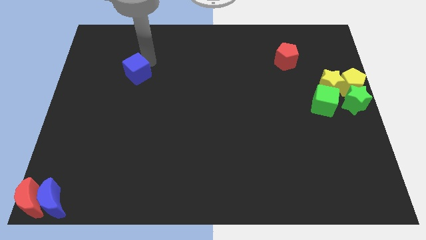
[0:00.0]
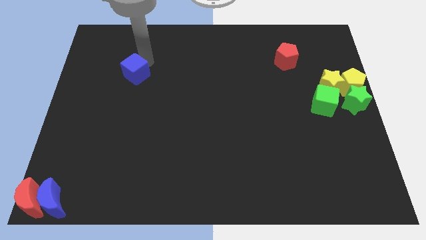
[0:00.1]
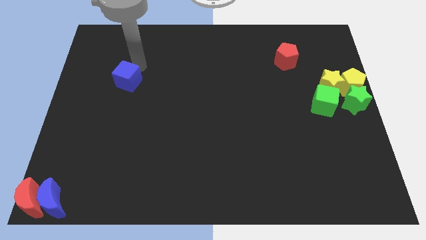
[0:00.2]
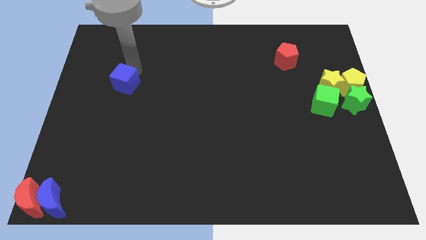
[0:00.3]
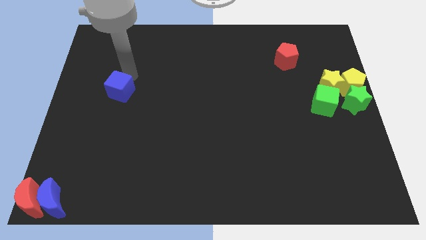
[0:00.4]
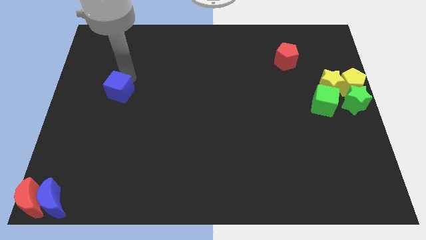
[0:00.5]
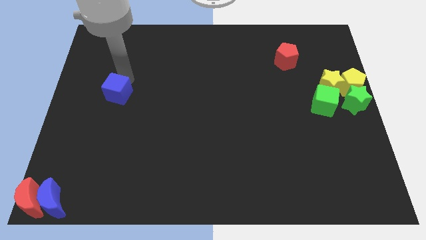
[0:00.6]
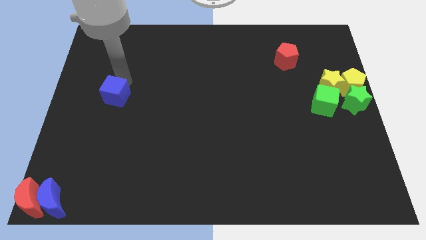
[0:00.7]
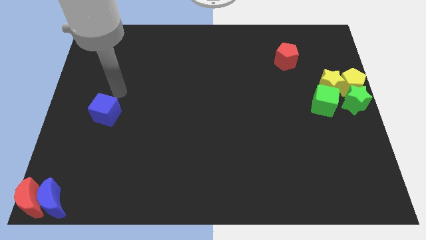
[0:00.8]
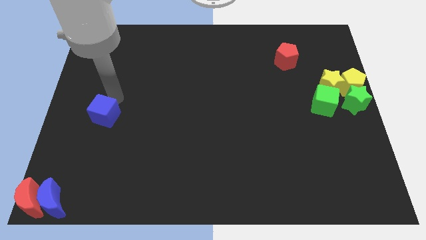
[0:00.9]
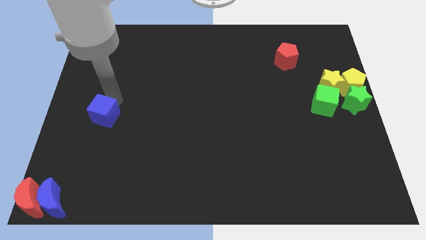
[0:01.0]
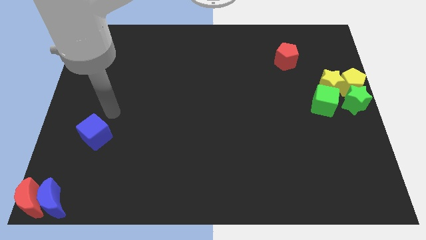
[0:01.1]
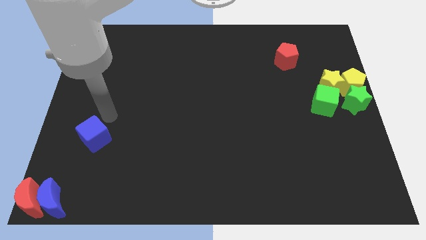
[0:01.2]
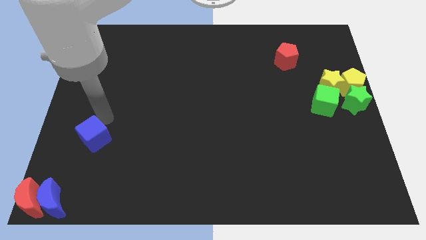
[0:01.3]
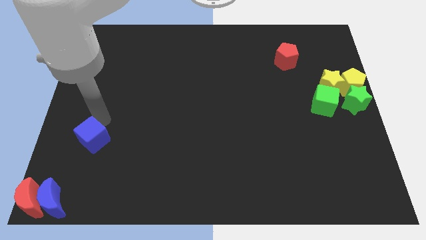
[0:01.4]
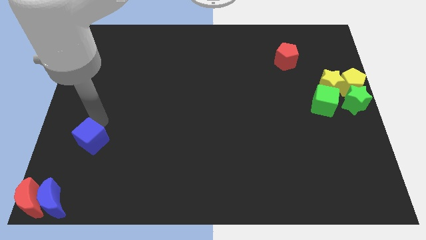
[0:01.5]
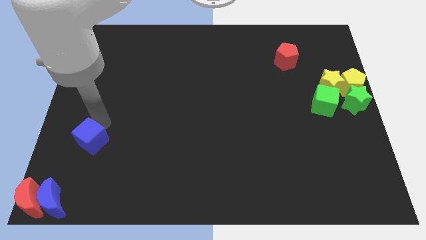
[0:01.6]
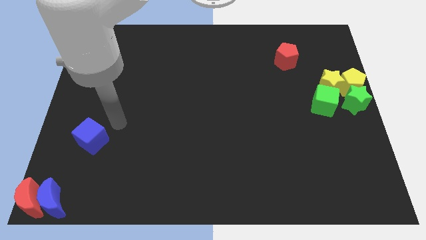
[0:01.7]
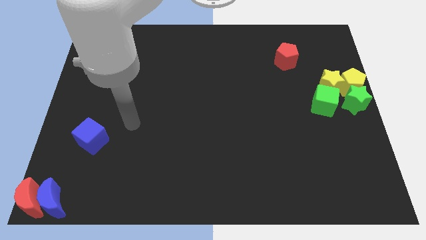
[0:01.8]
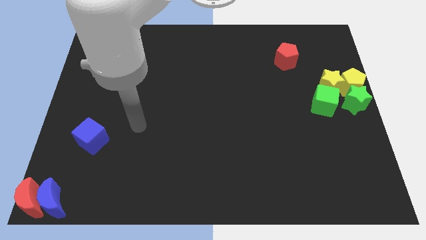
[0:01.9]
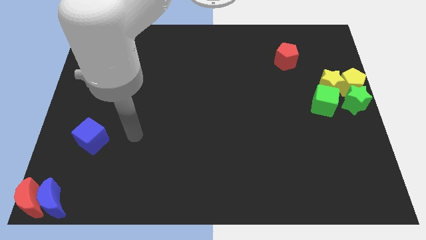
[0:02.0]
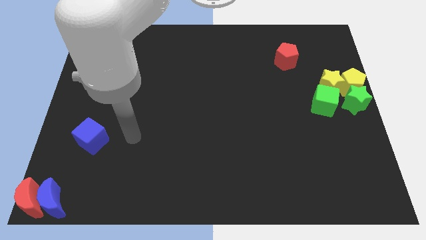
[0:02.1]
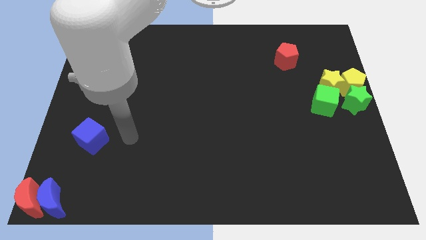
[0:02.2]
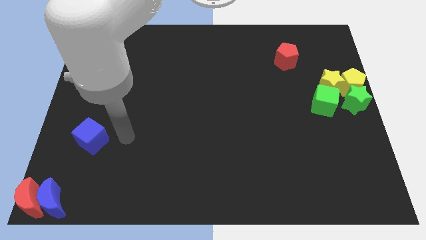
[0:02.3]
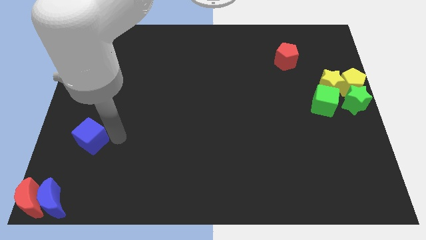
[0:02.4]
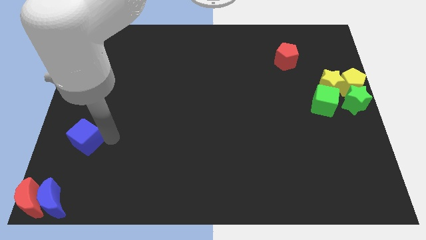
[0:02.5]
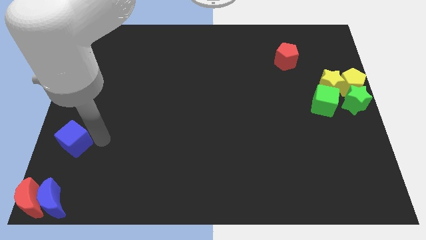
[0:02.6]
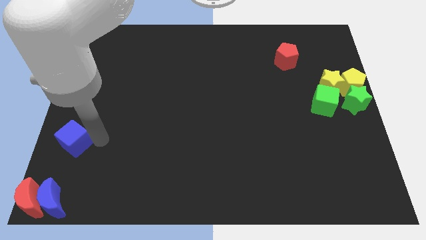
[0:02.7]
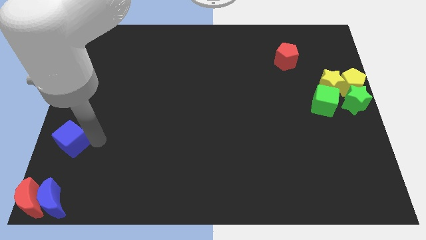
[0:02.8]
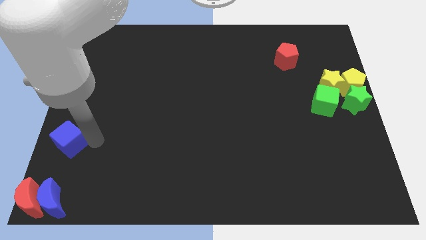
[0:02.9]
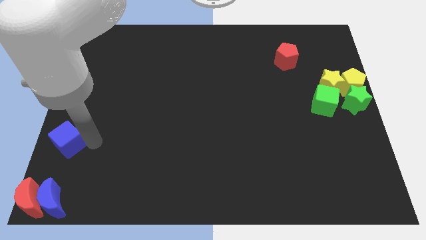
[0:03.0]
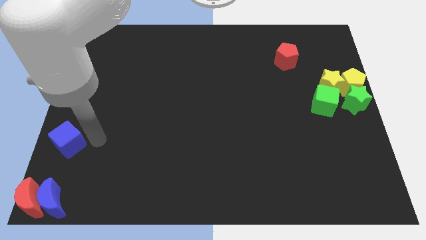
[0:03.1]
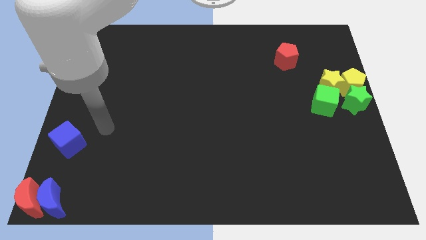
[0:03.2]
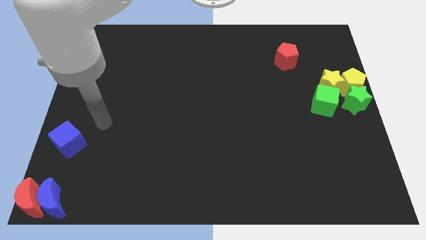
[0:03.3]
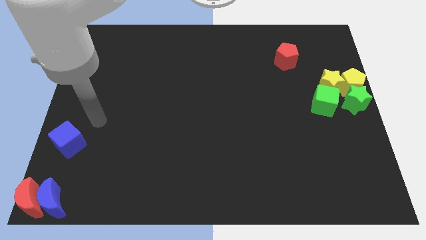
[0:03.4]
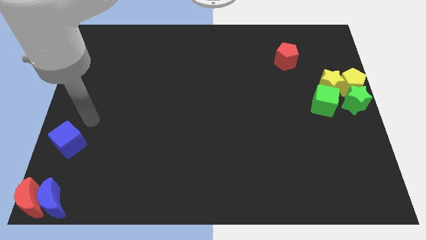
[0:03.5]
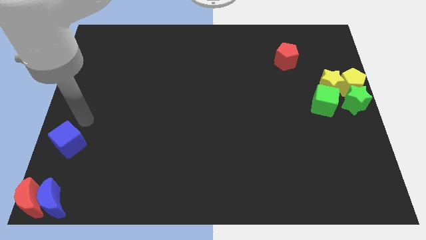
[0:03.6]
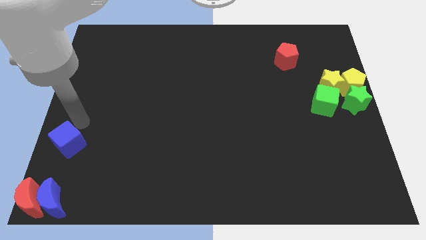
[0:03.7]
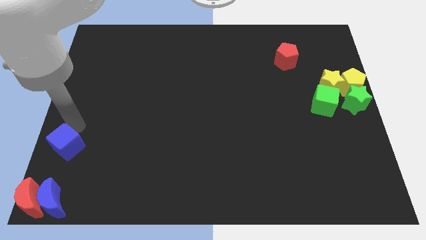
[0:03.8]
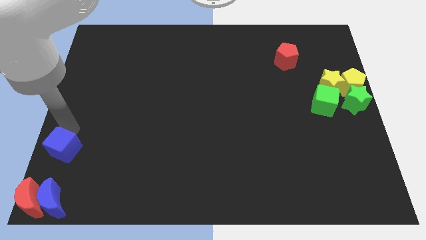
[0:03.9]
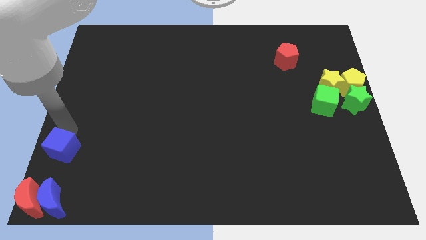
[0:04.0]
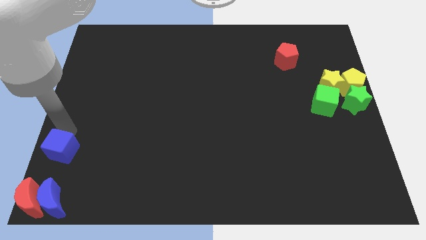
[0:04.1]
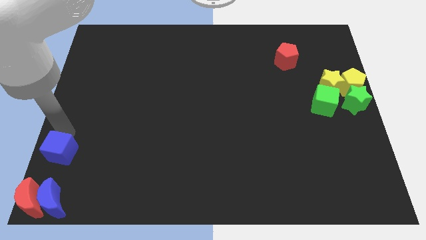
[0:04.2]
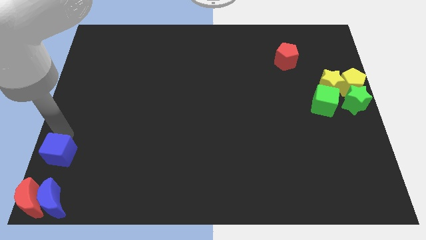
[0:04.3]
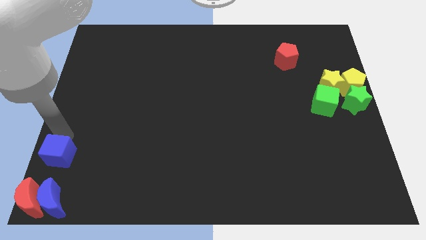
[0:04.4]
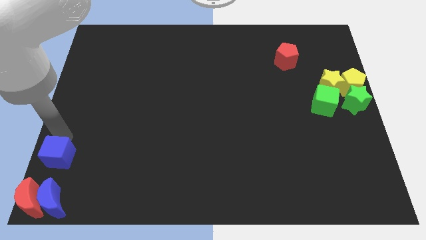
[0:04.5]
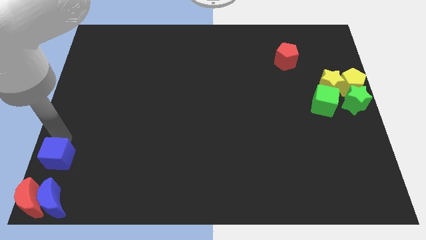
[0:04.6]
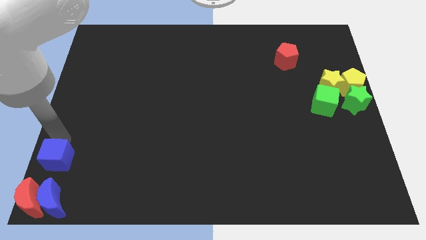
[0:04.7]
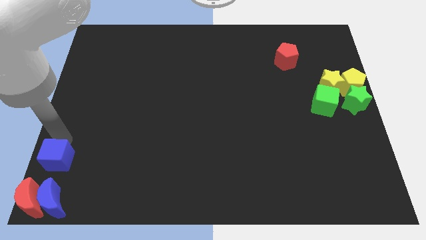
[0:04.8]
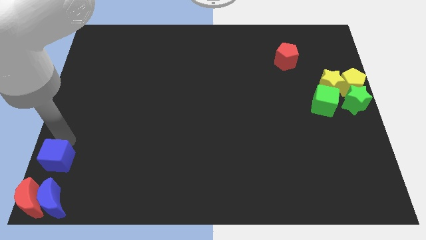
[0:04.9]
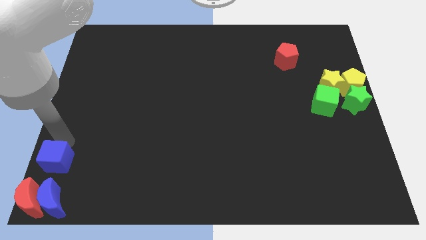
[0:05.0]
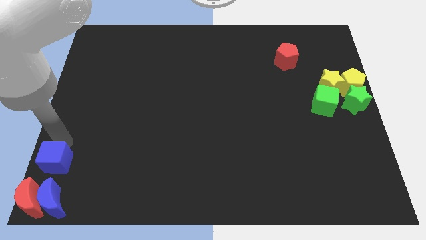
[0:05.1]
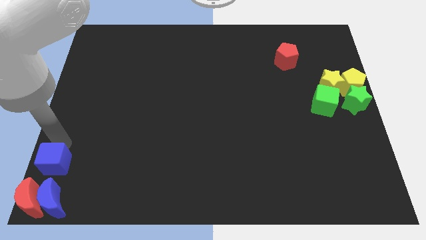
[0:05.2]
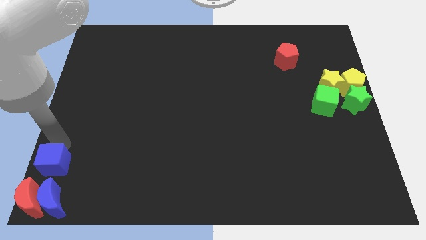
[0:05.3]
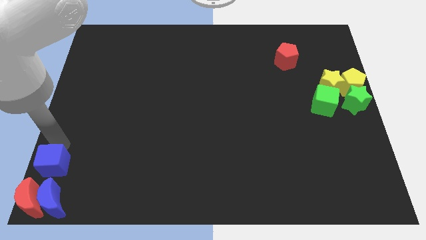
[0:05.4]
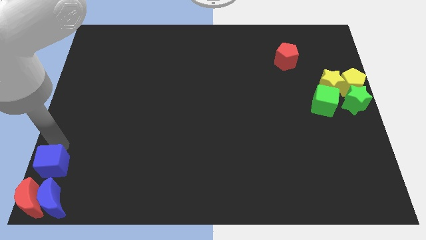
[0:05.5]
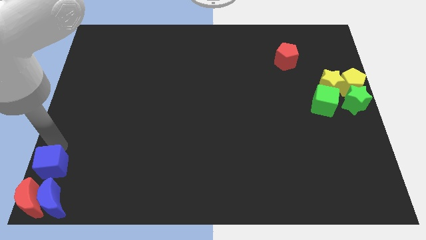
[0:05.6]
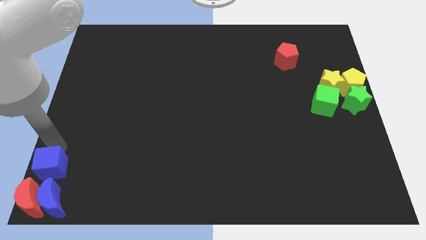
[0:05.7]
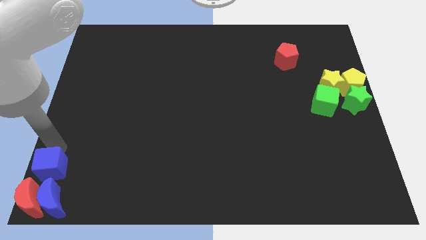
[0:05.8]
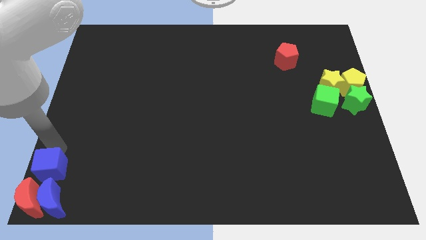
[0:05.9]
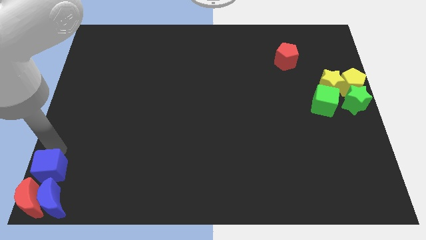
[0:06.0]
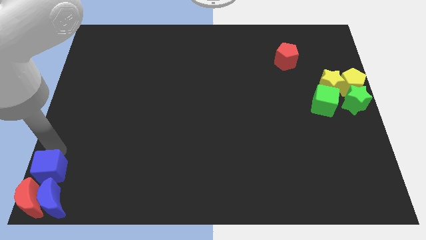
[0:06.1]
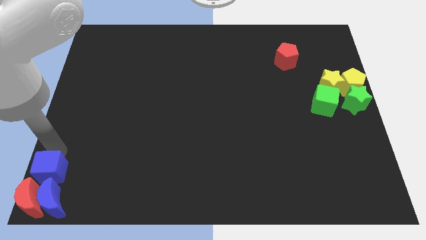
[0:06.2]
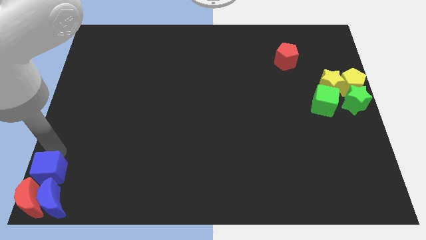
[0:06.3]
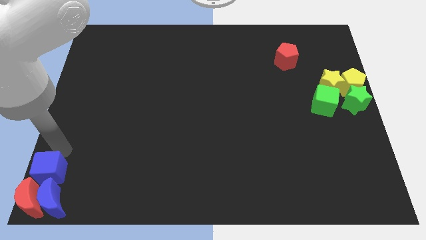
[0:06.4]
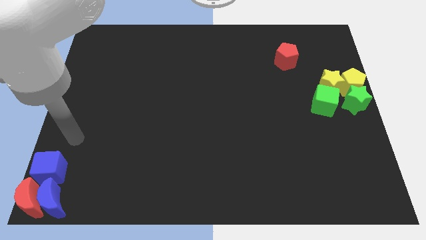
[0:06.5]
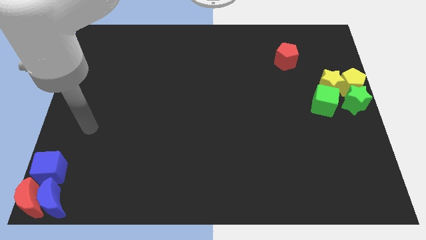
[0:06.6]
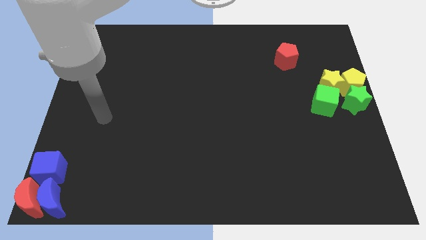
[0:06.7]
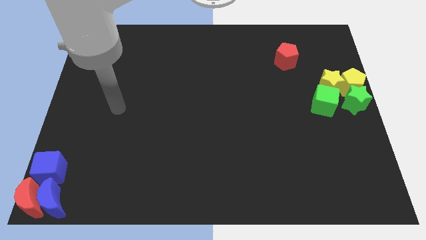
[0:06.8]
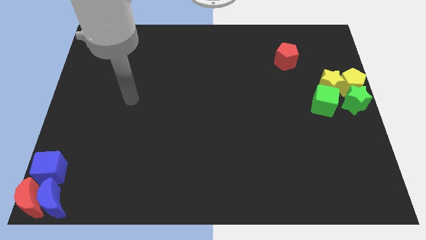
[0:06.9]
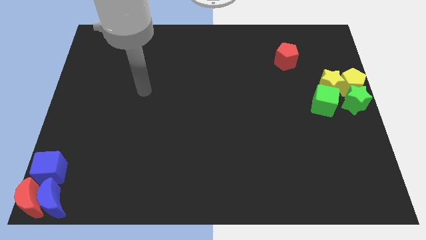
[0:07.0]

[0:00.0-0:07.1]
place the blue cube above the red and blue crescents

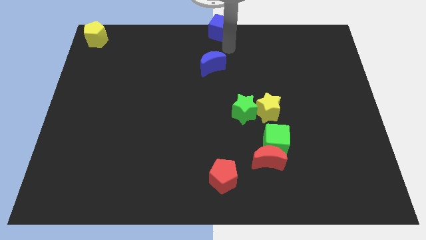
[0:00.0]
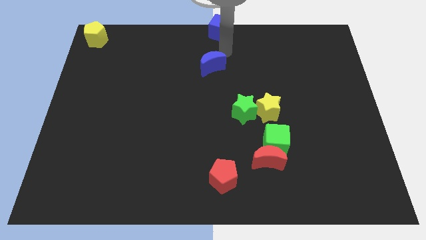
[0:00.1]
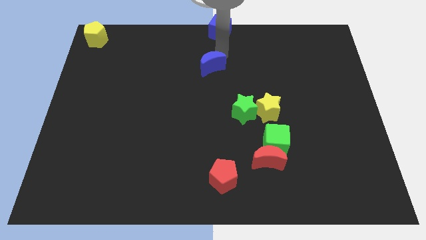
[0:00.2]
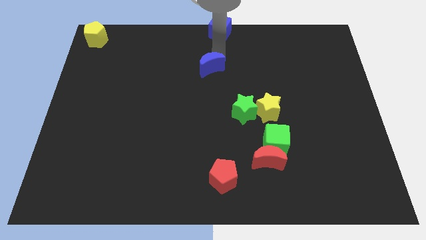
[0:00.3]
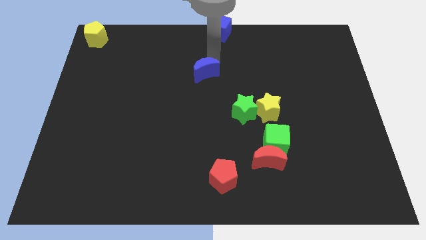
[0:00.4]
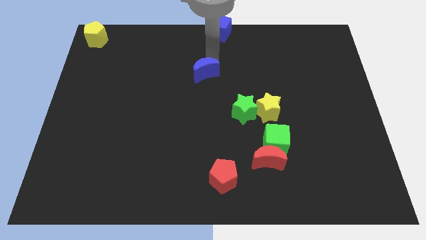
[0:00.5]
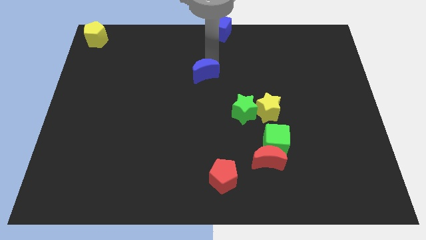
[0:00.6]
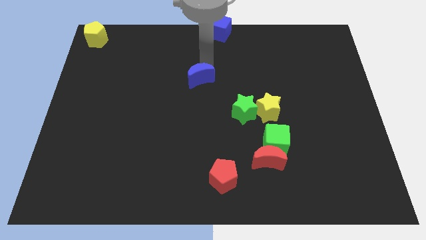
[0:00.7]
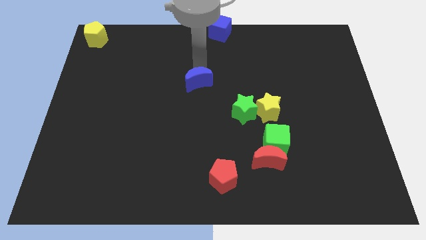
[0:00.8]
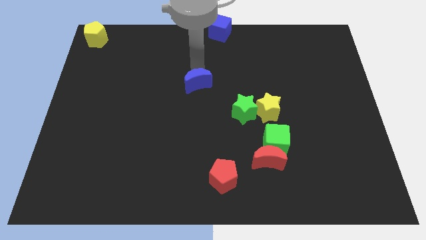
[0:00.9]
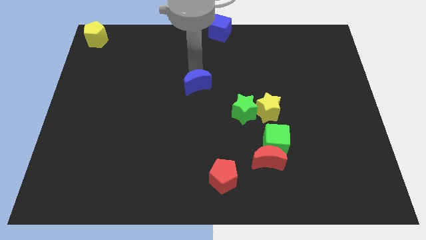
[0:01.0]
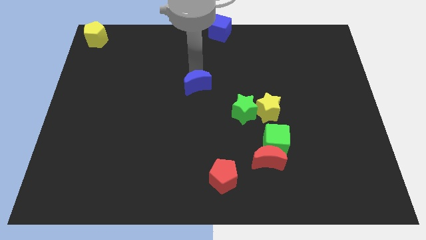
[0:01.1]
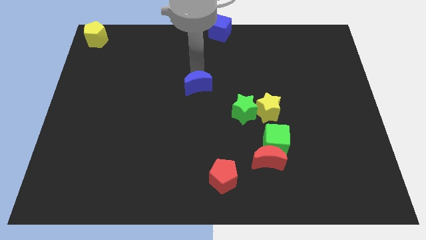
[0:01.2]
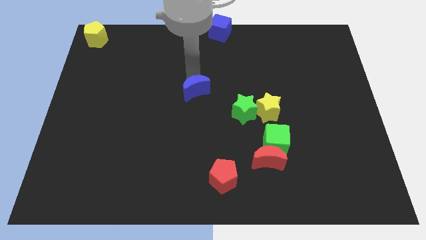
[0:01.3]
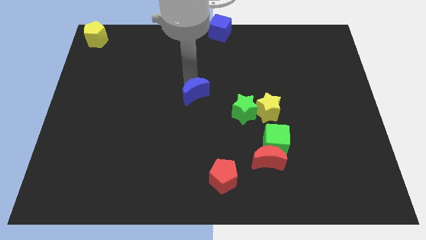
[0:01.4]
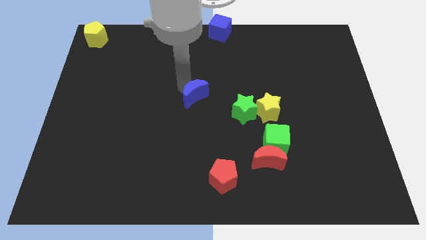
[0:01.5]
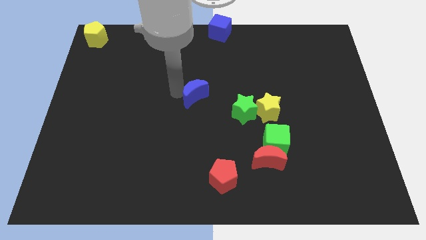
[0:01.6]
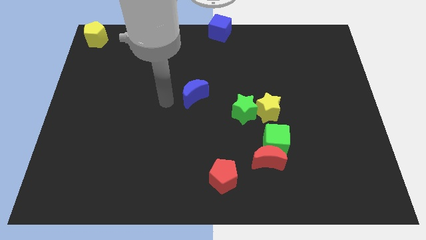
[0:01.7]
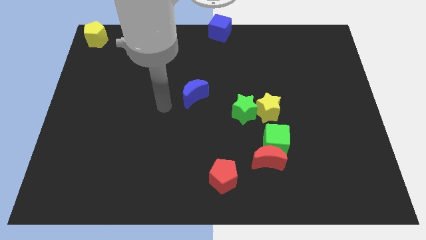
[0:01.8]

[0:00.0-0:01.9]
push the blue moon down slightly
